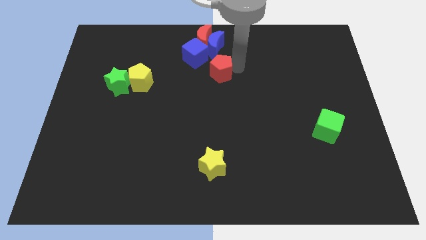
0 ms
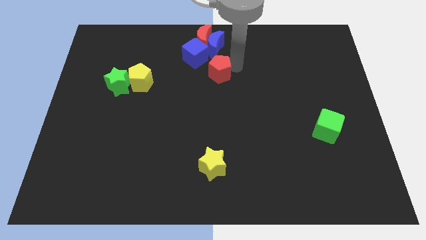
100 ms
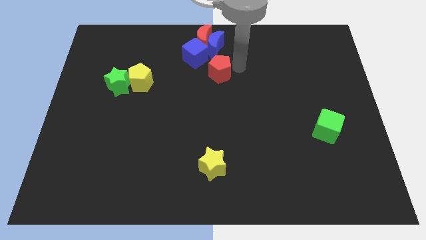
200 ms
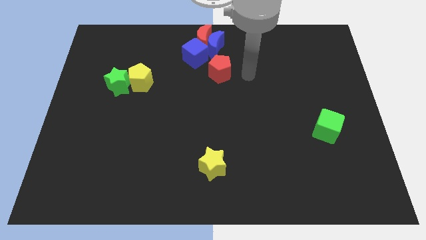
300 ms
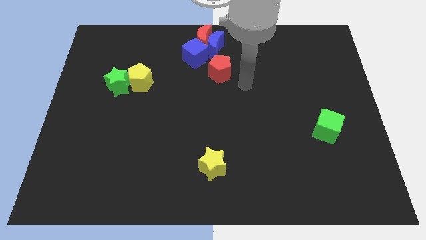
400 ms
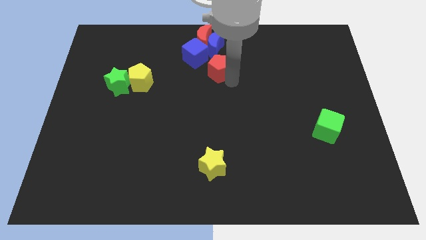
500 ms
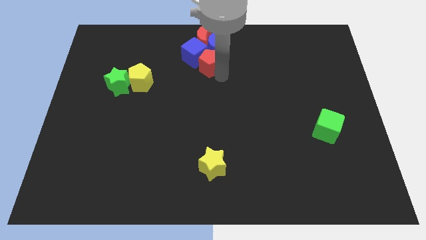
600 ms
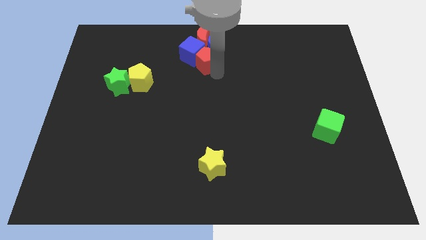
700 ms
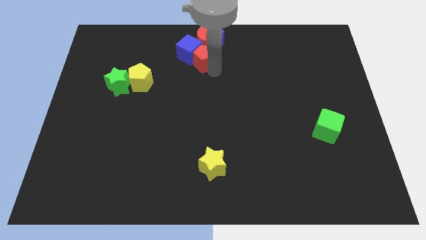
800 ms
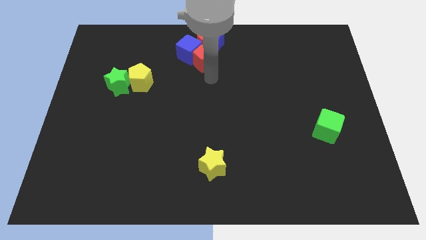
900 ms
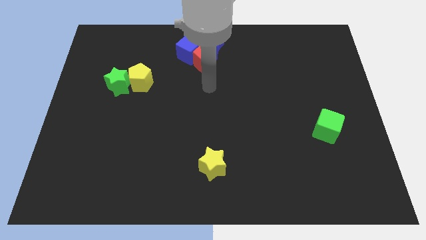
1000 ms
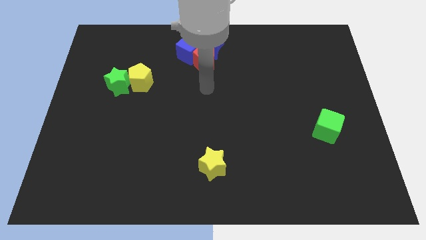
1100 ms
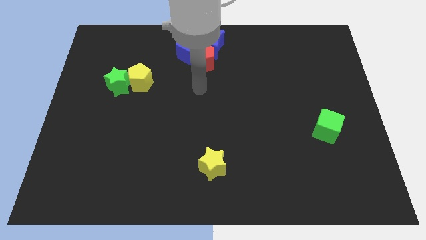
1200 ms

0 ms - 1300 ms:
push the red pentagon into blue cube

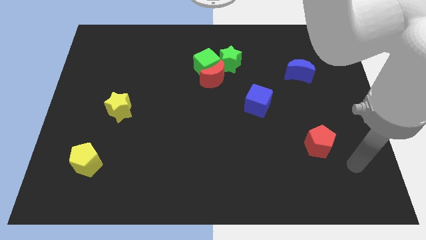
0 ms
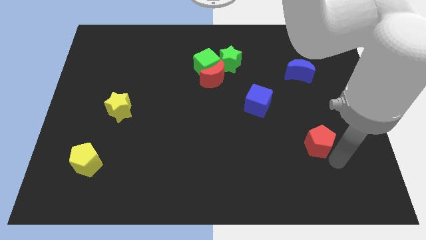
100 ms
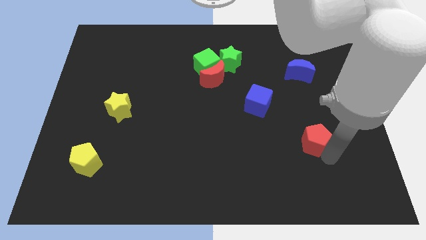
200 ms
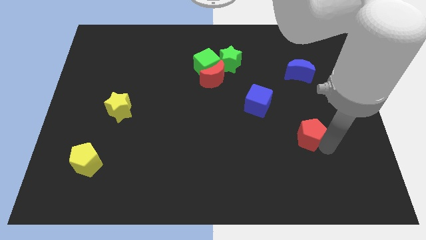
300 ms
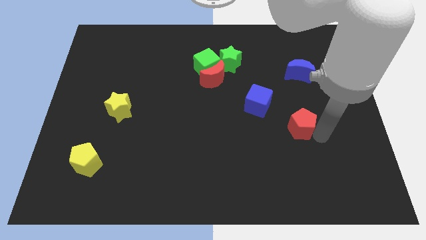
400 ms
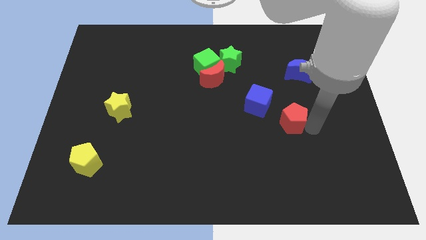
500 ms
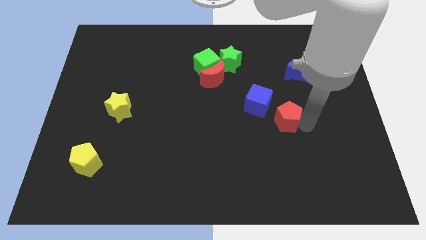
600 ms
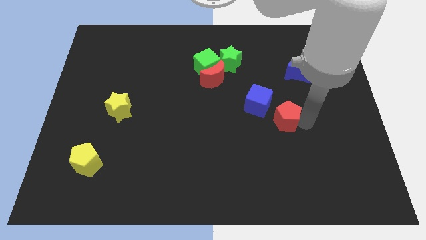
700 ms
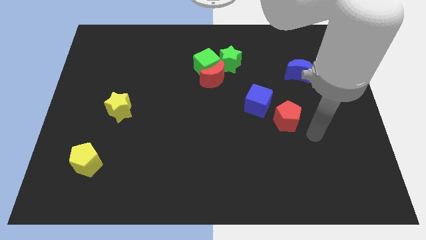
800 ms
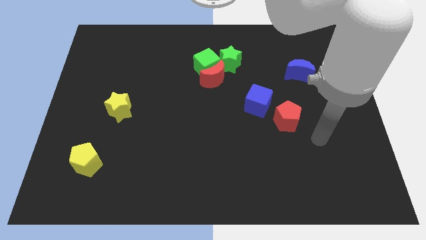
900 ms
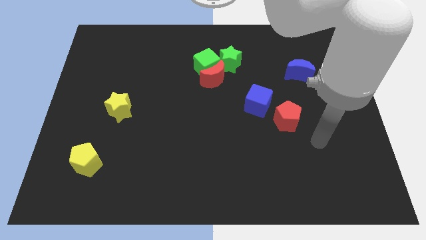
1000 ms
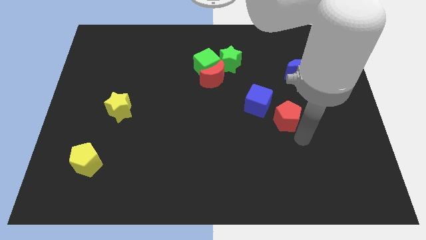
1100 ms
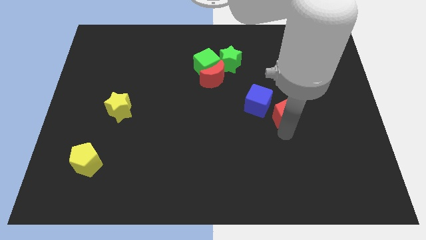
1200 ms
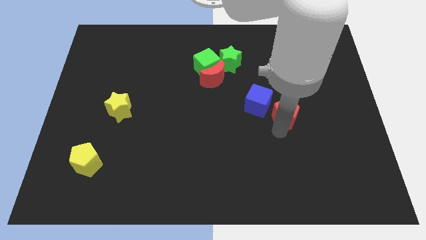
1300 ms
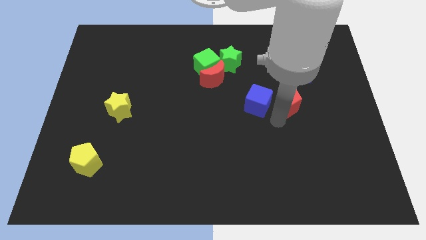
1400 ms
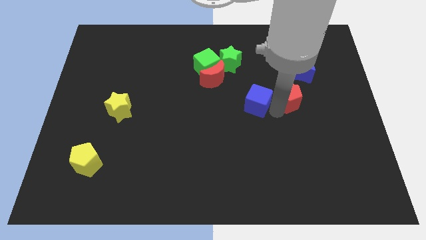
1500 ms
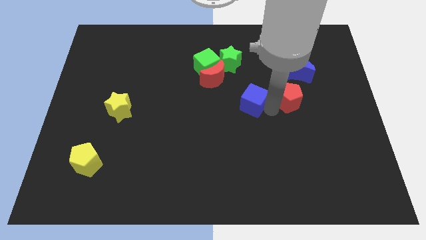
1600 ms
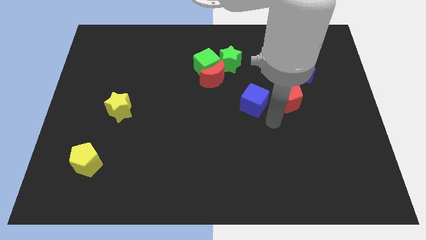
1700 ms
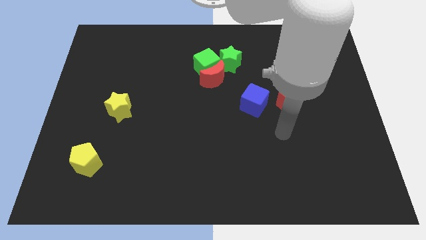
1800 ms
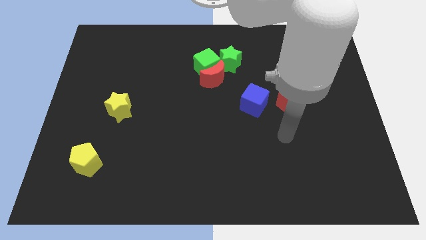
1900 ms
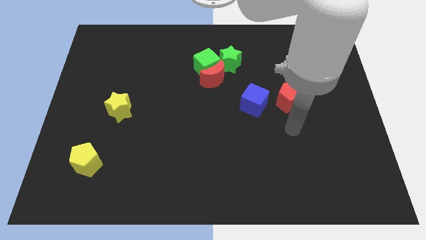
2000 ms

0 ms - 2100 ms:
push the red pentagon close to the blue cube

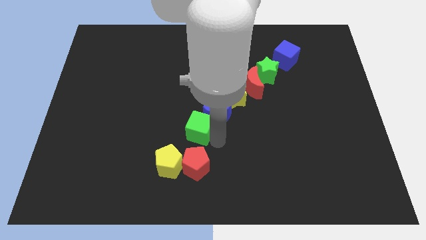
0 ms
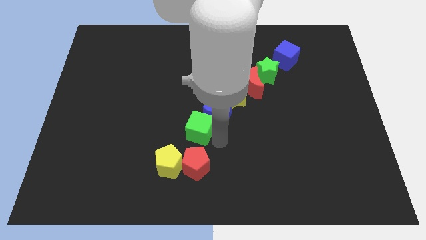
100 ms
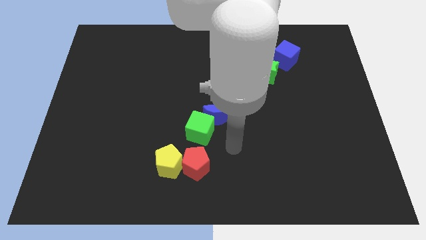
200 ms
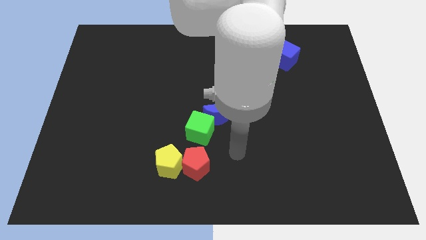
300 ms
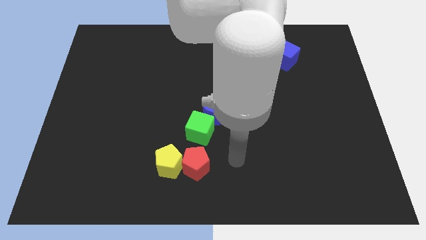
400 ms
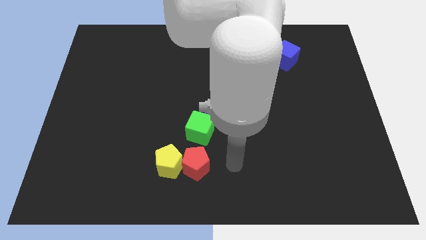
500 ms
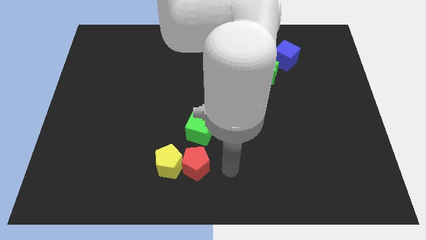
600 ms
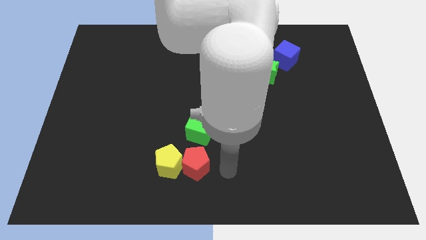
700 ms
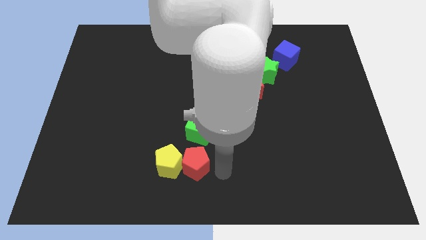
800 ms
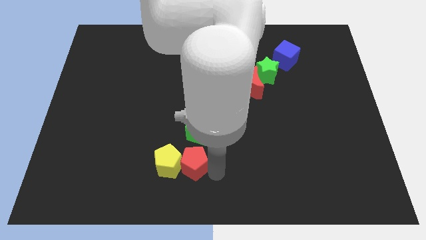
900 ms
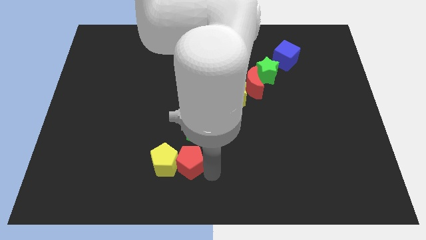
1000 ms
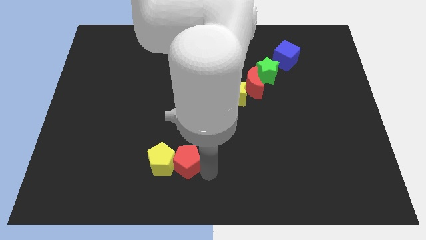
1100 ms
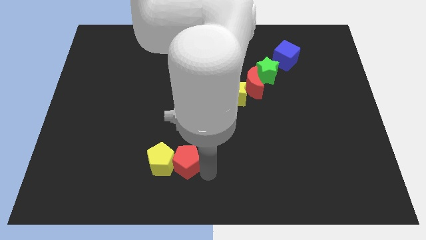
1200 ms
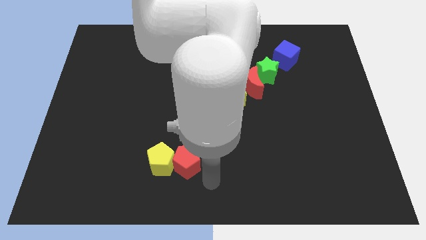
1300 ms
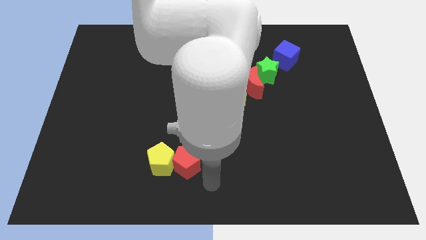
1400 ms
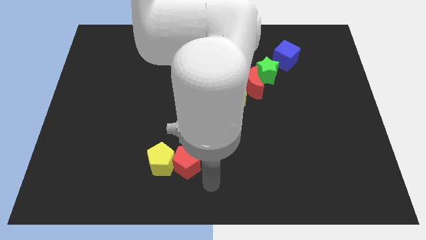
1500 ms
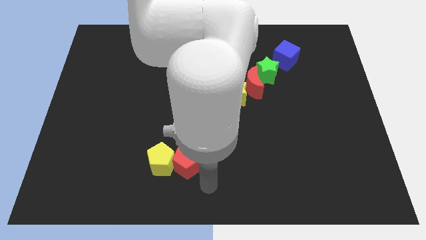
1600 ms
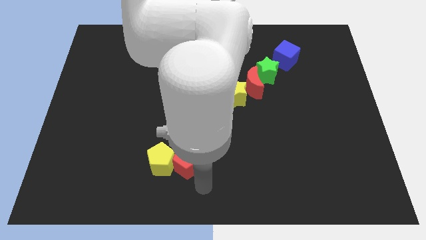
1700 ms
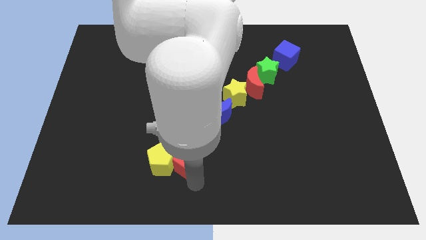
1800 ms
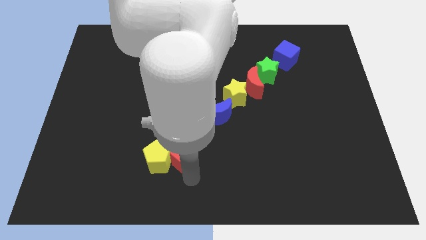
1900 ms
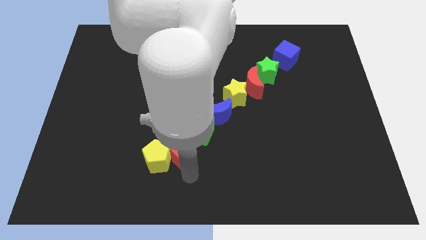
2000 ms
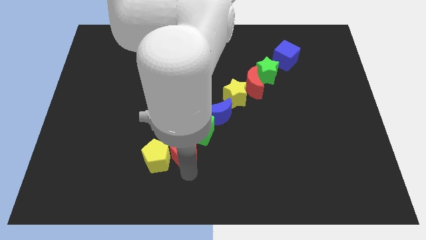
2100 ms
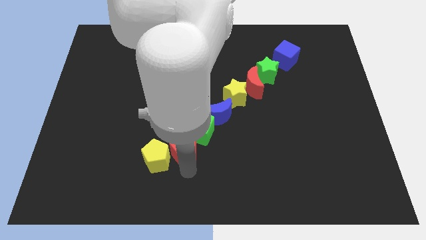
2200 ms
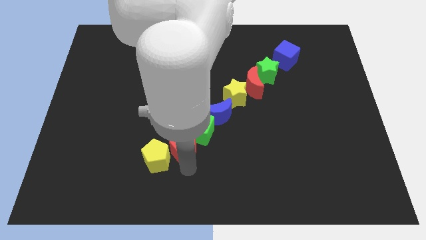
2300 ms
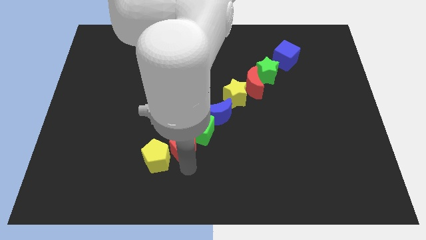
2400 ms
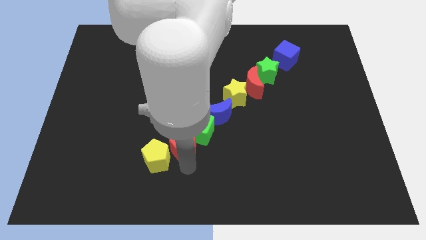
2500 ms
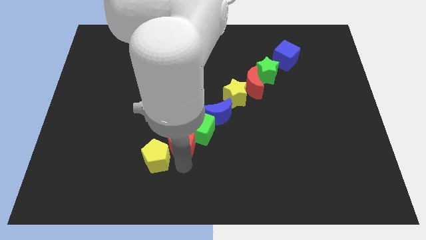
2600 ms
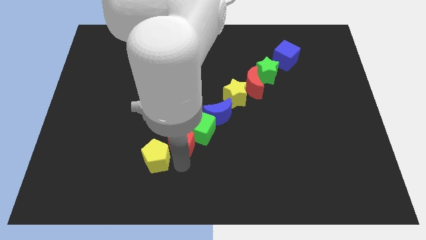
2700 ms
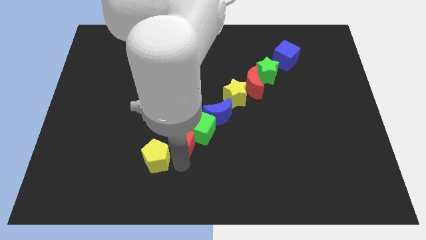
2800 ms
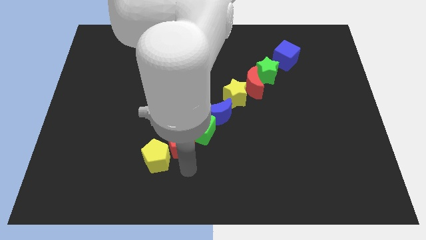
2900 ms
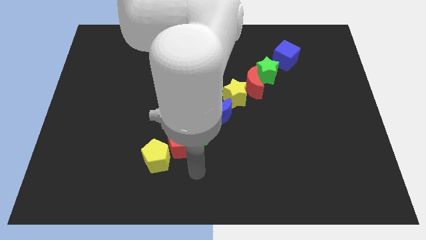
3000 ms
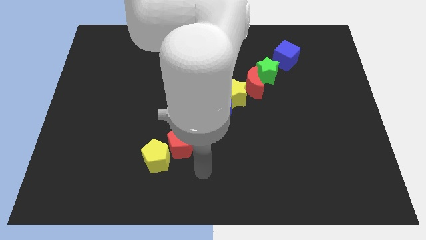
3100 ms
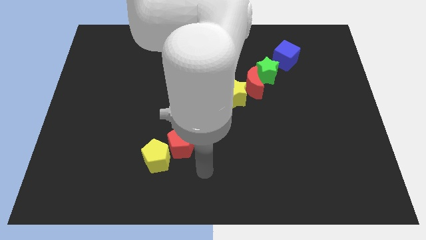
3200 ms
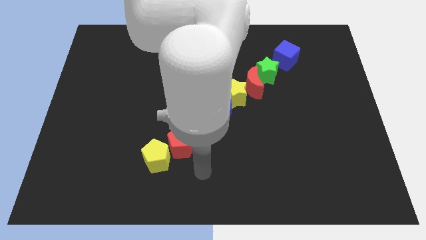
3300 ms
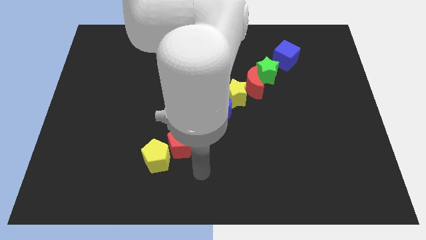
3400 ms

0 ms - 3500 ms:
place red and yellow pentagons down to the green cube

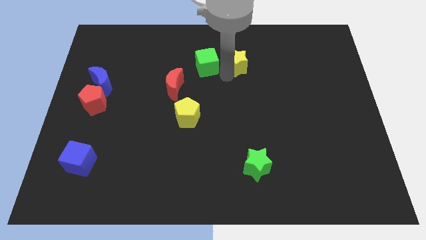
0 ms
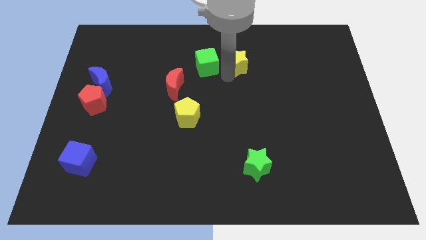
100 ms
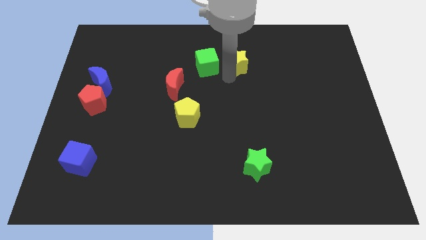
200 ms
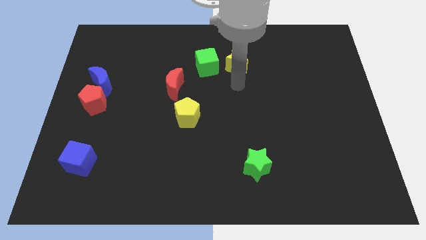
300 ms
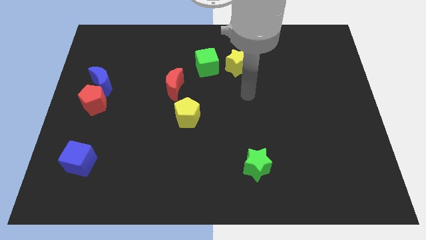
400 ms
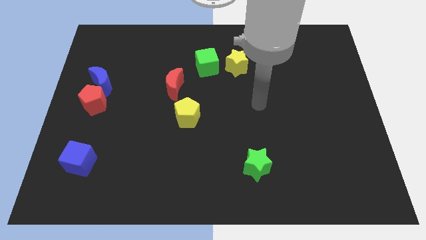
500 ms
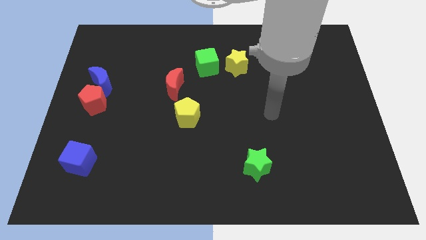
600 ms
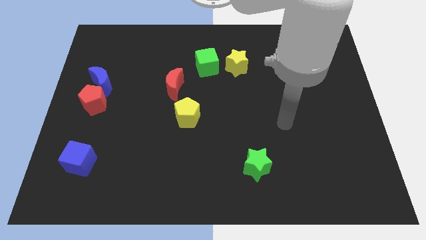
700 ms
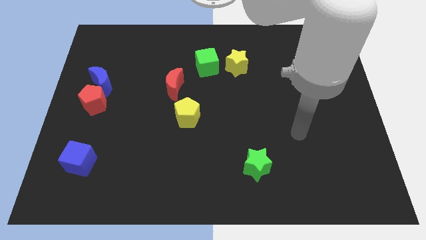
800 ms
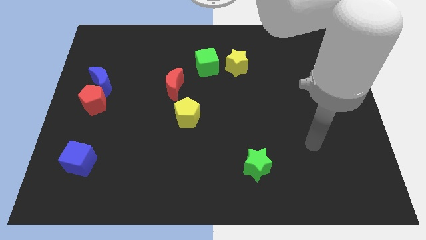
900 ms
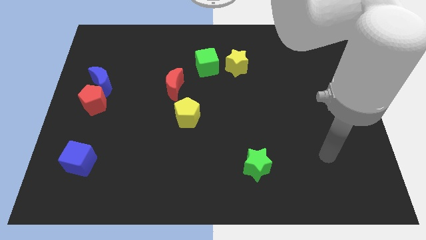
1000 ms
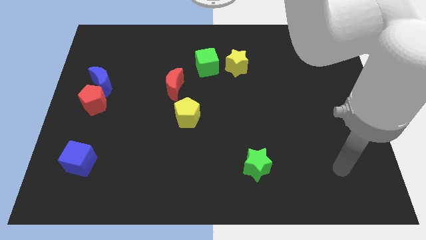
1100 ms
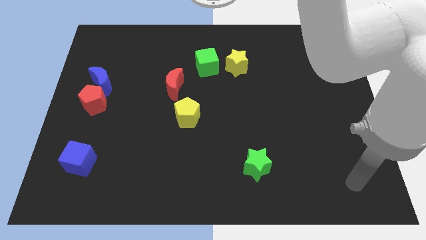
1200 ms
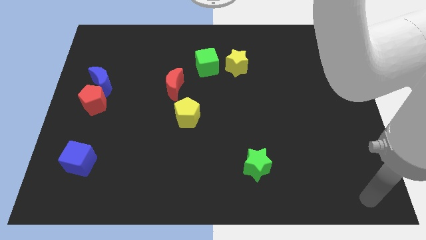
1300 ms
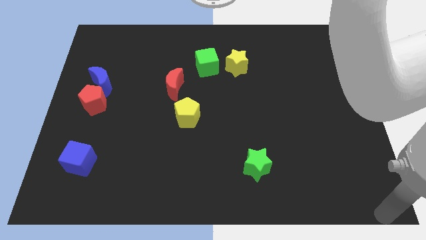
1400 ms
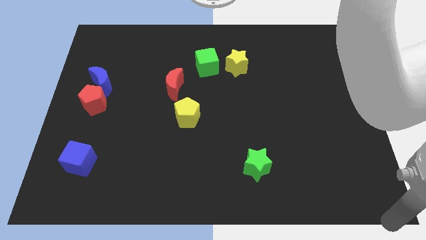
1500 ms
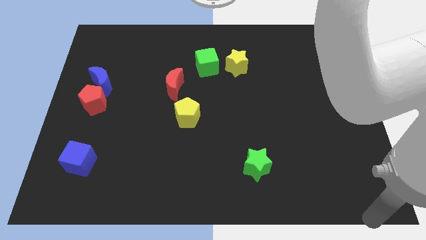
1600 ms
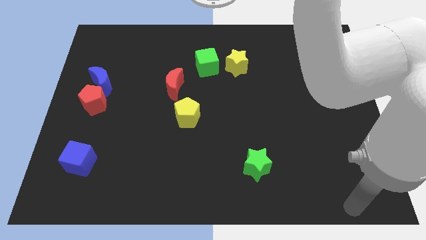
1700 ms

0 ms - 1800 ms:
move your arm away from the yellow star

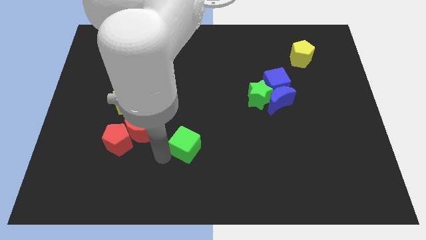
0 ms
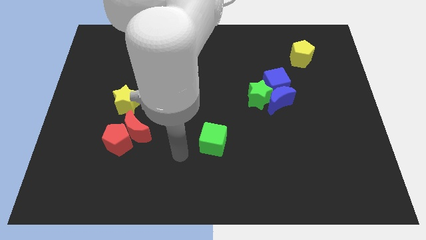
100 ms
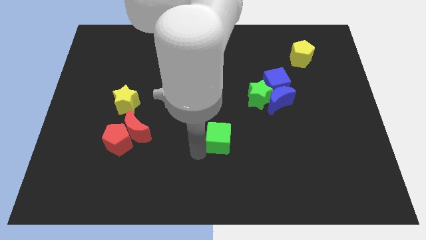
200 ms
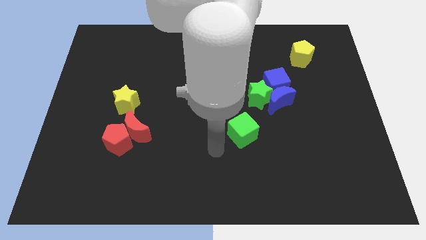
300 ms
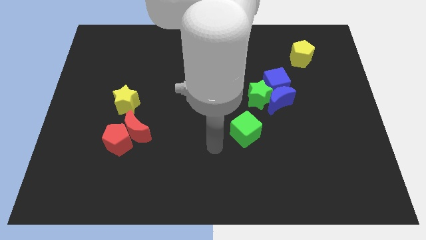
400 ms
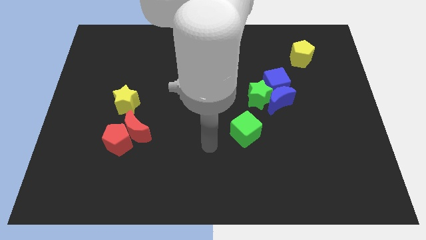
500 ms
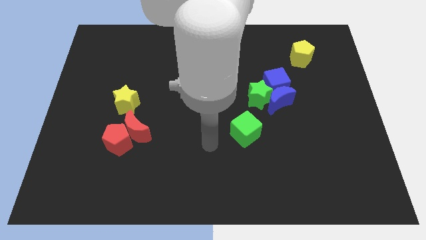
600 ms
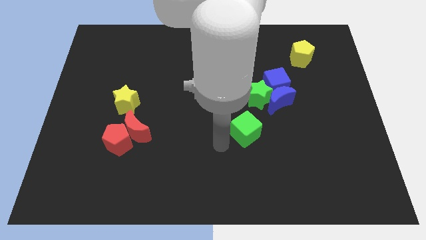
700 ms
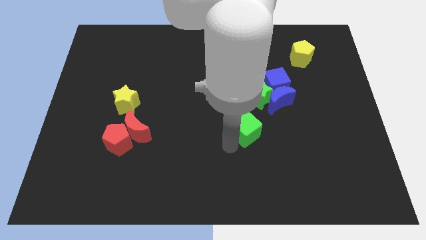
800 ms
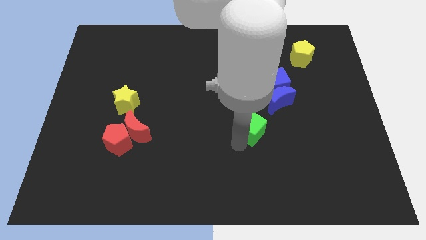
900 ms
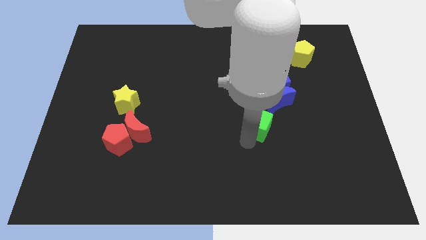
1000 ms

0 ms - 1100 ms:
slide the green cube to the bottom of the green star
